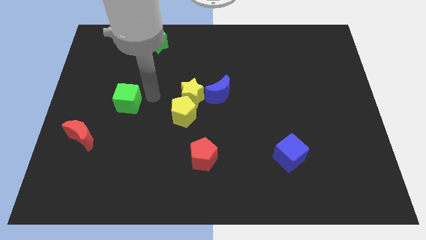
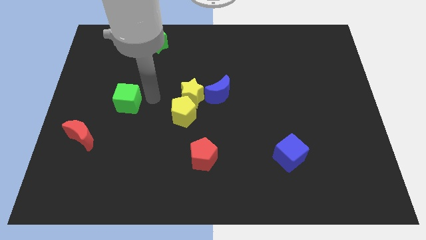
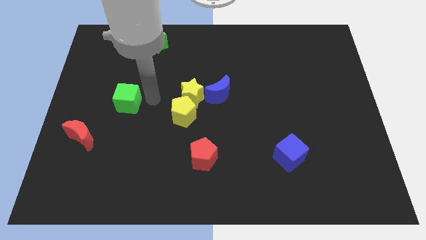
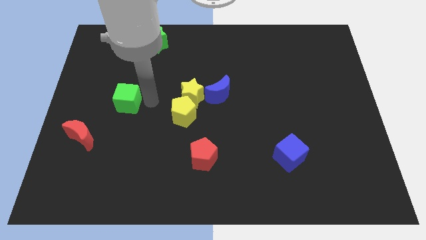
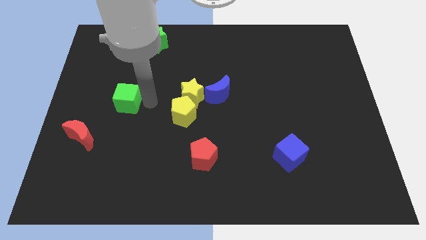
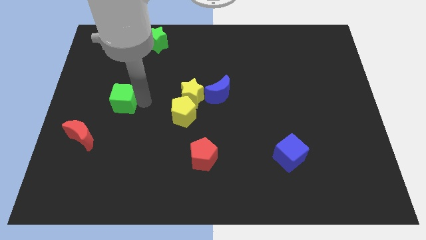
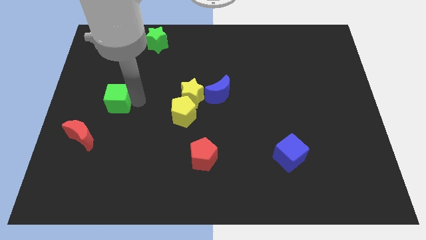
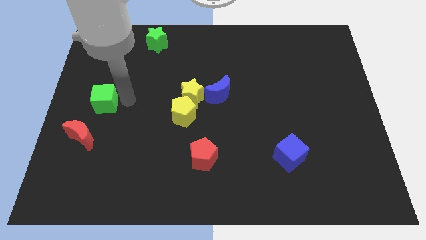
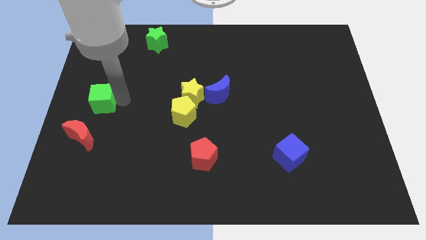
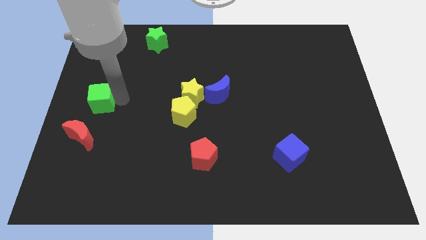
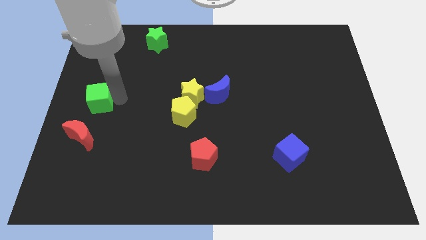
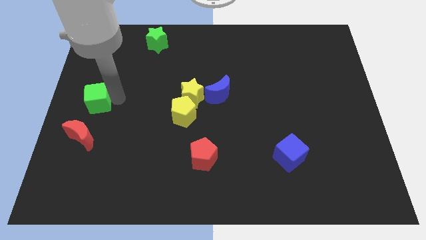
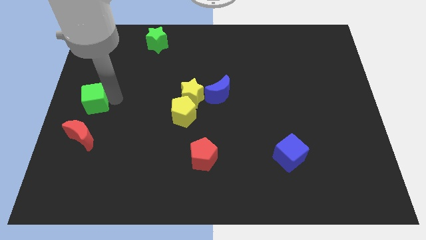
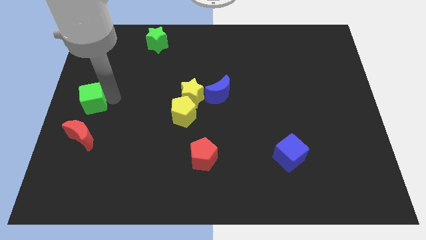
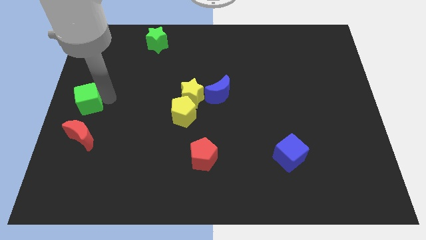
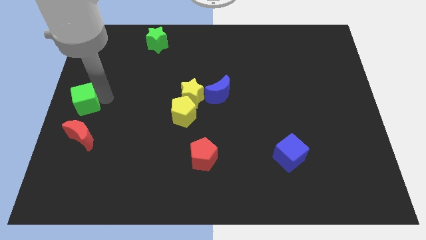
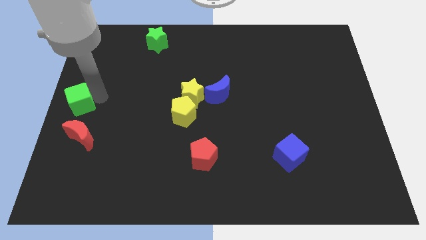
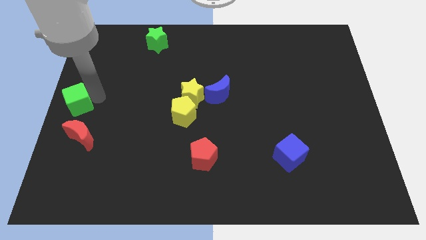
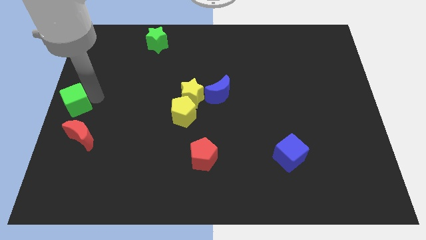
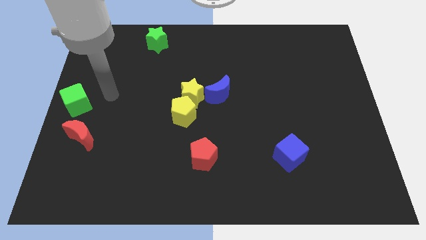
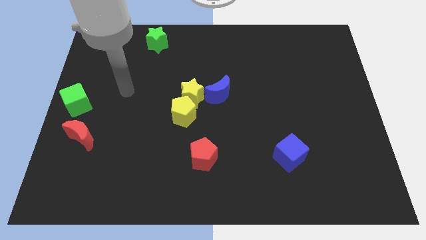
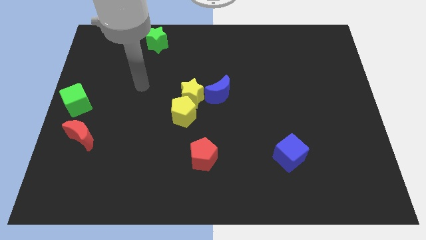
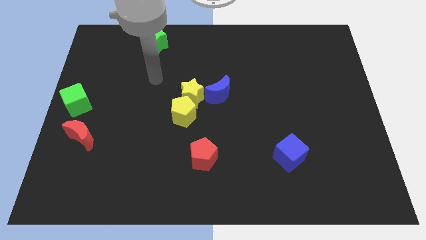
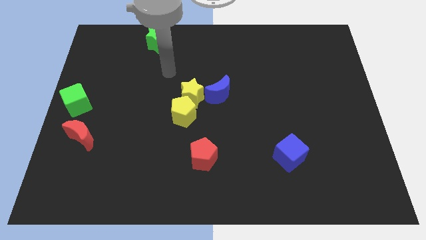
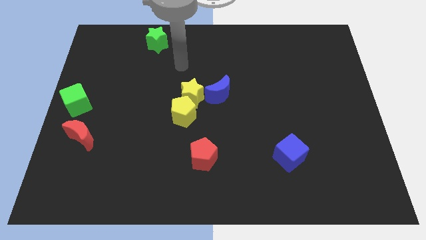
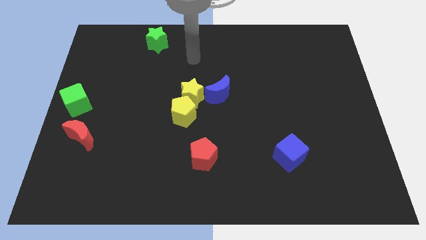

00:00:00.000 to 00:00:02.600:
move the green cube to the center left

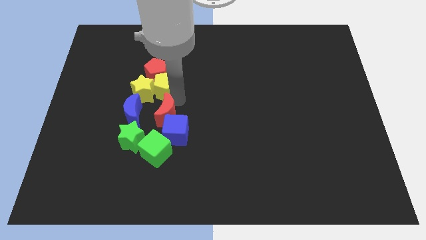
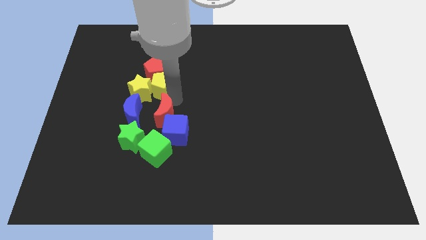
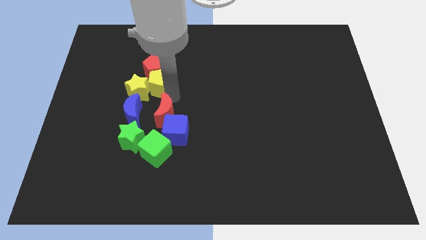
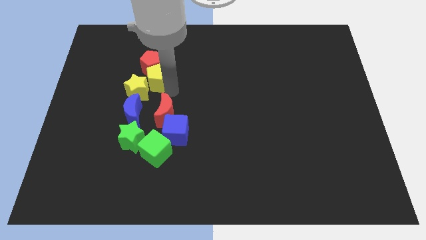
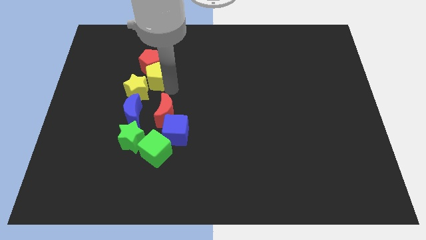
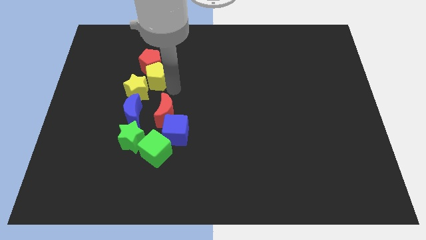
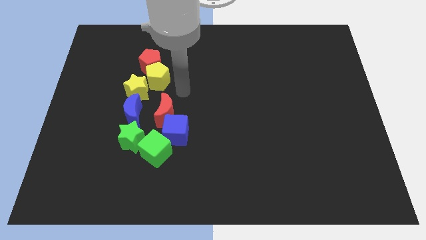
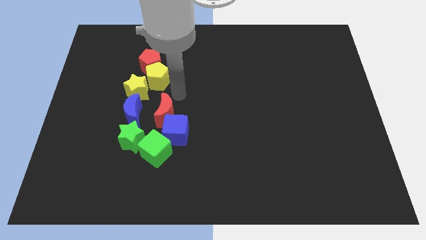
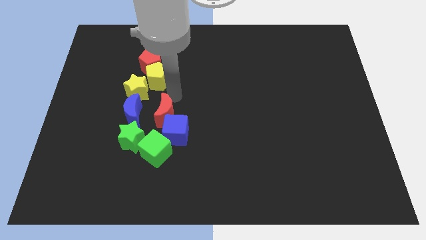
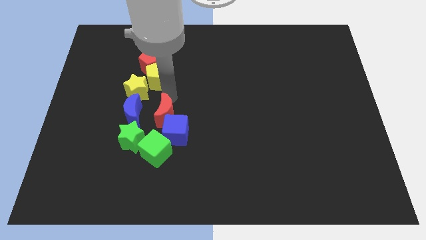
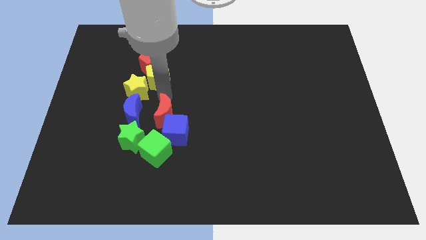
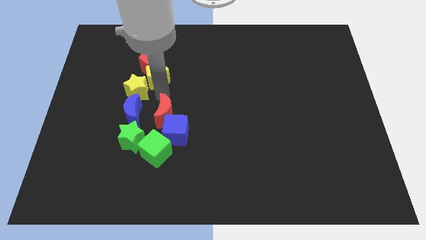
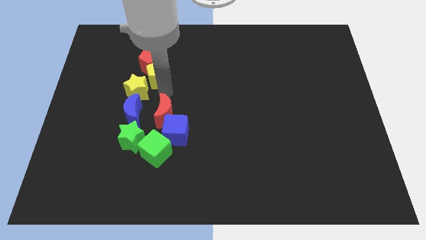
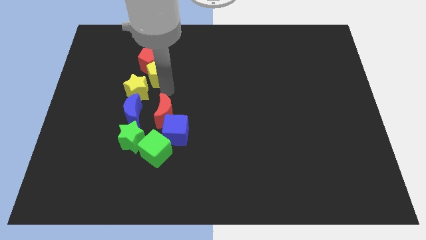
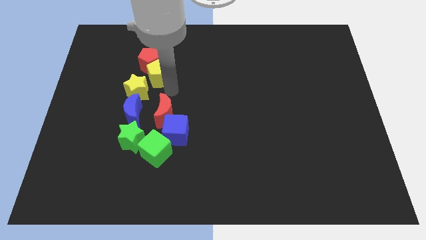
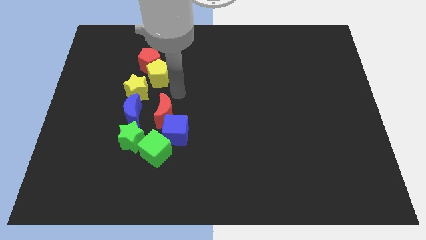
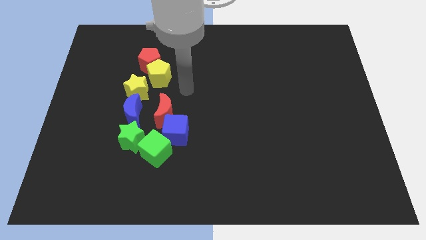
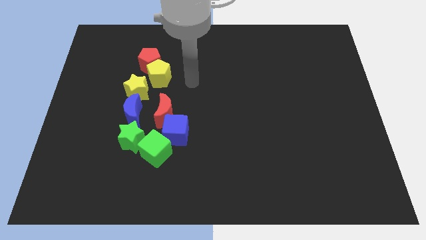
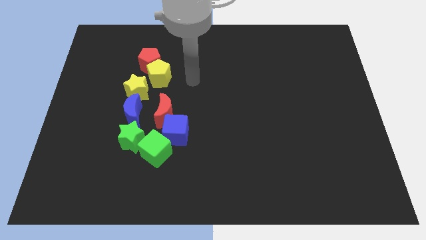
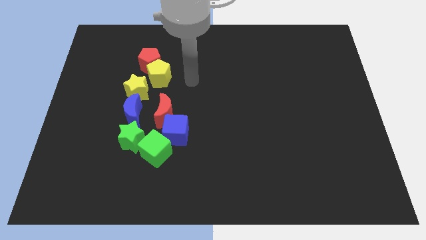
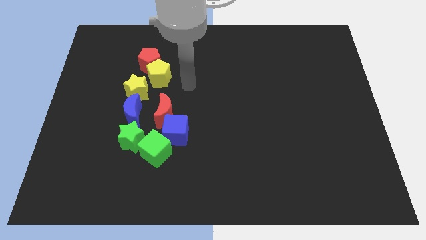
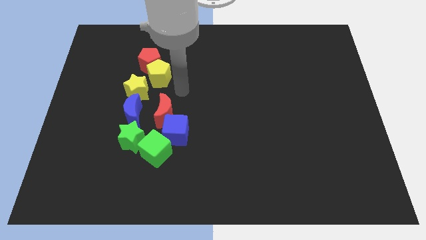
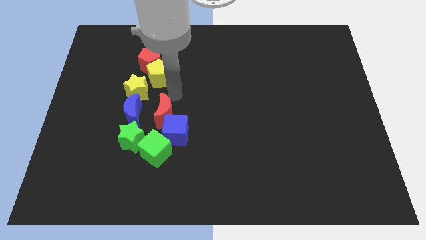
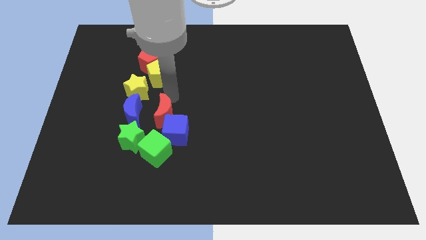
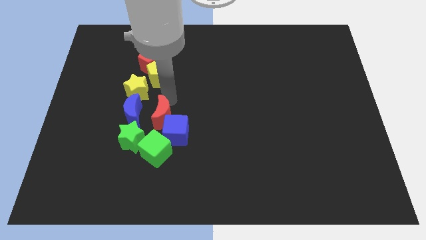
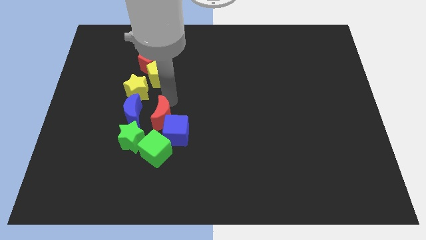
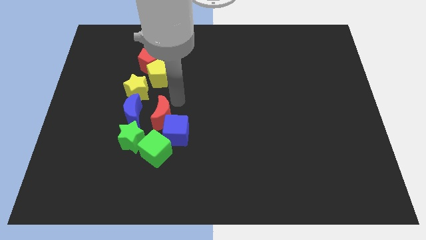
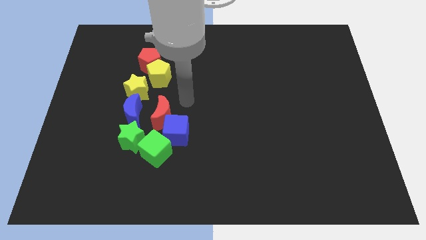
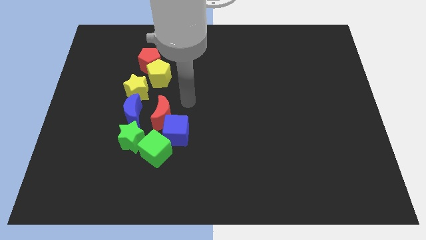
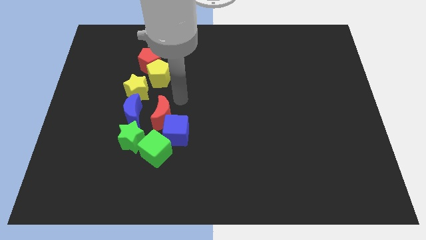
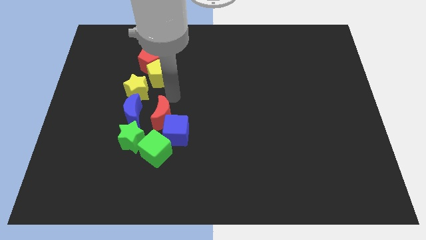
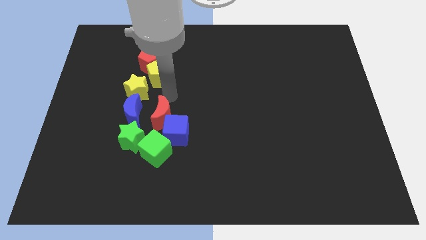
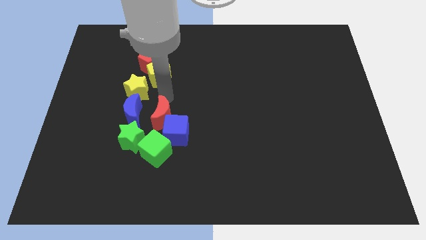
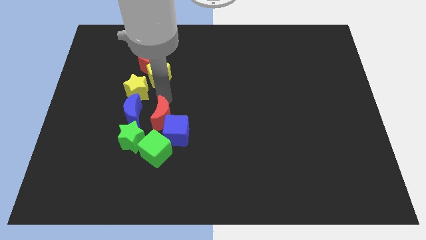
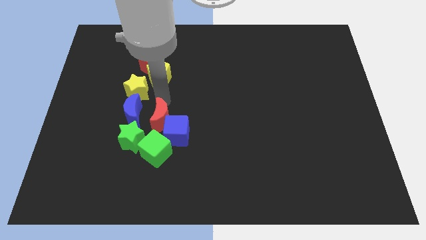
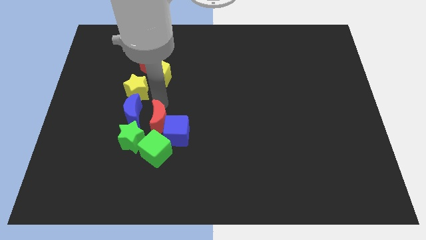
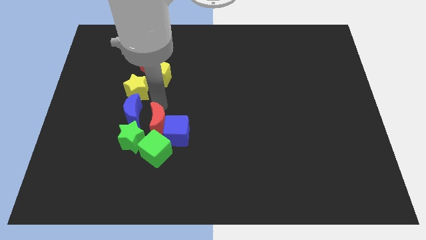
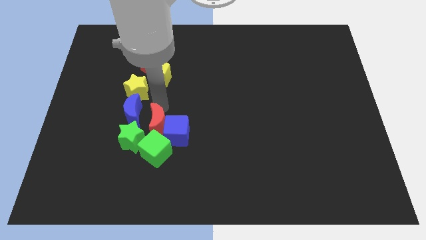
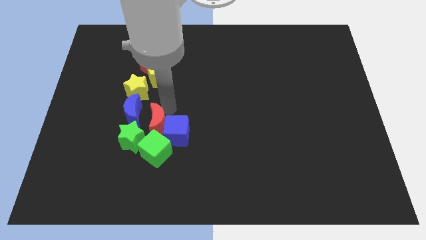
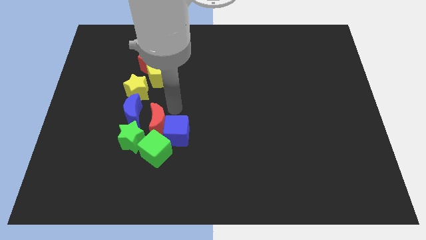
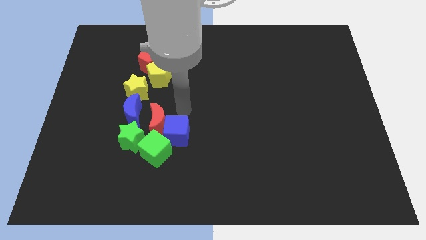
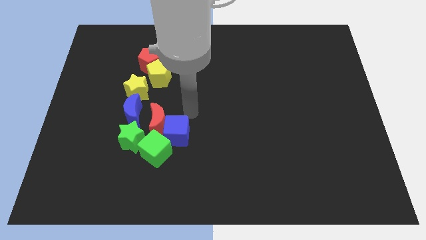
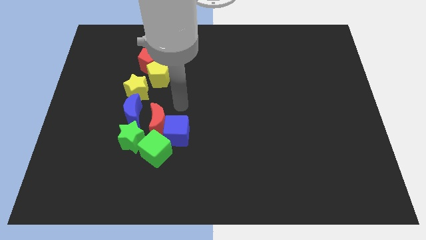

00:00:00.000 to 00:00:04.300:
push the red moon close to the green cube

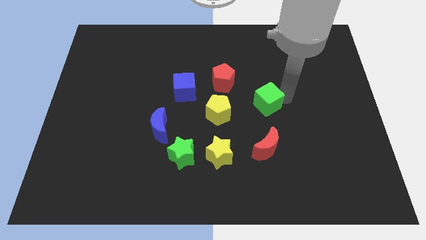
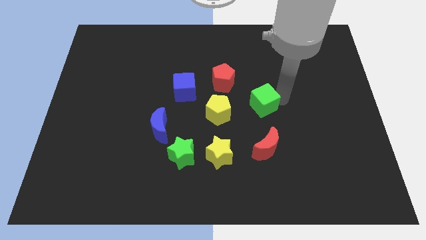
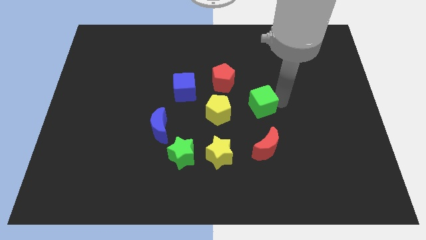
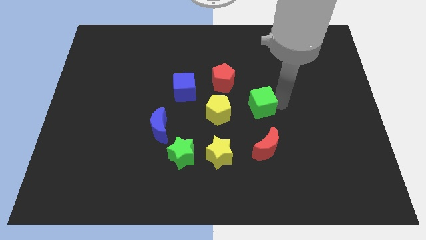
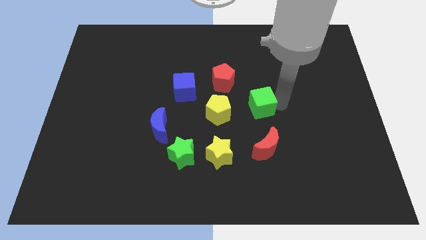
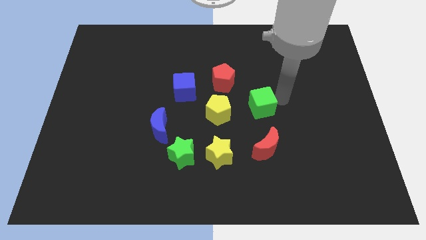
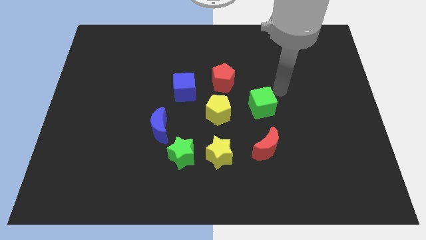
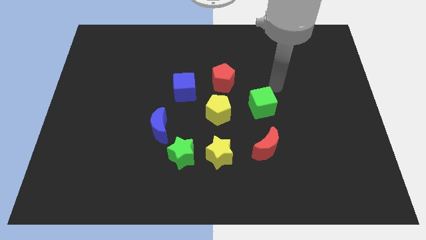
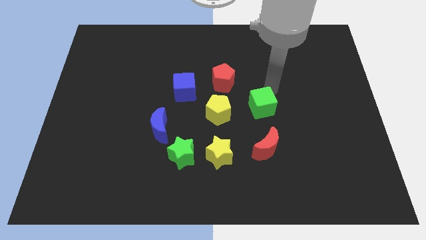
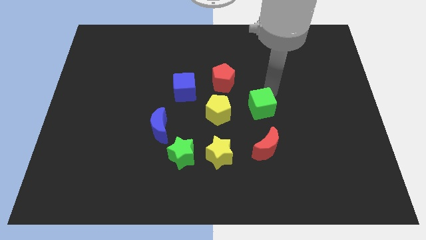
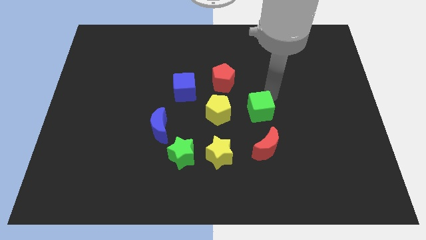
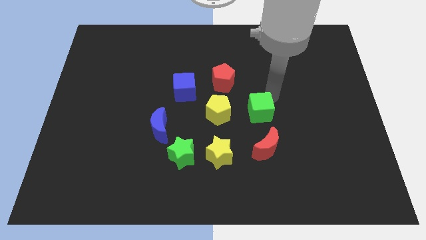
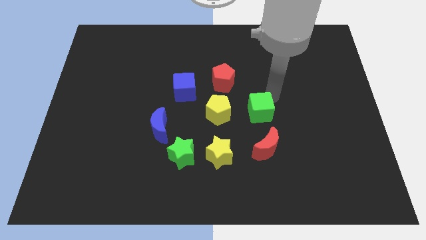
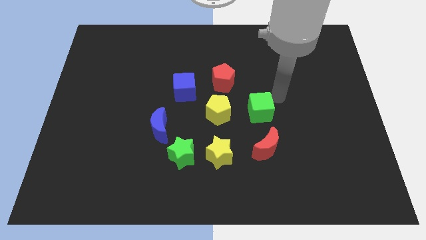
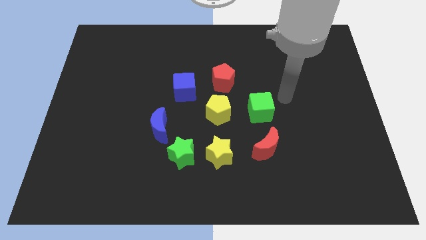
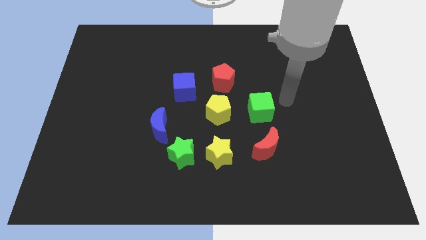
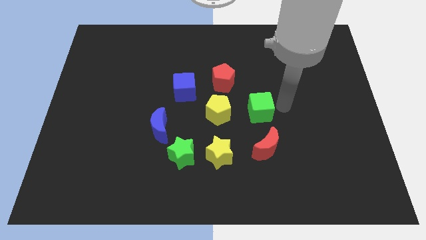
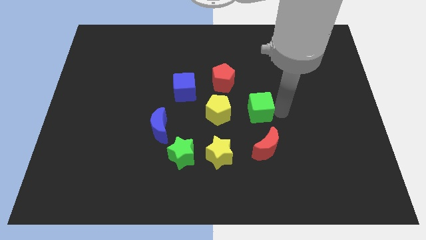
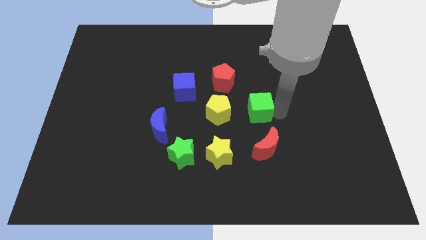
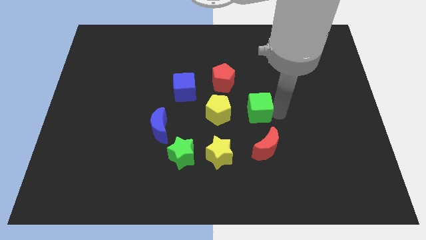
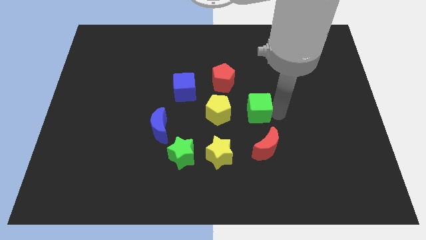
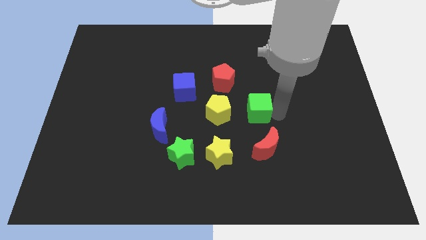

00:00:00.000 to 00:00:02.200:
move the green cube towards the right side of the yellow pentagon
